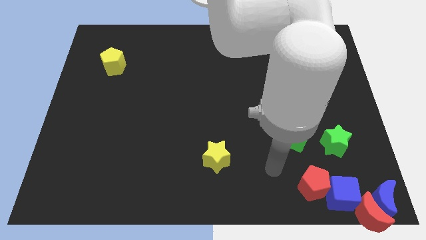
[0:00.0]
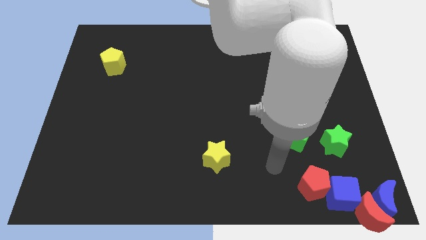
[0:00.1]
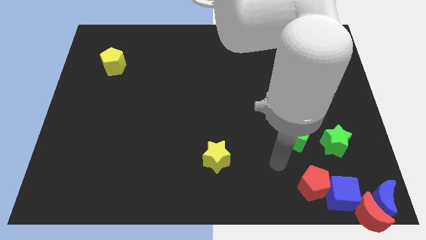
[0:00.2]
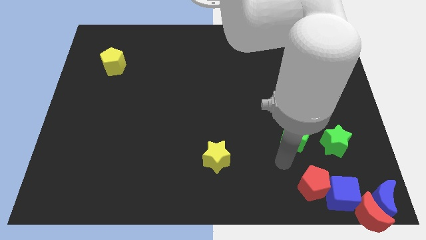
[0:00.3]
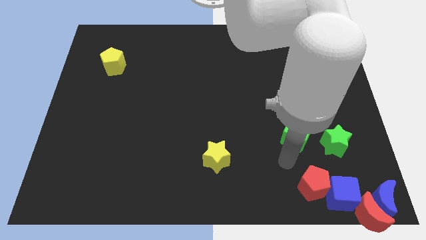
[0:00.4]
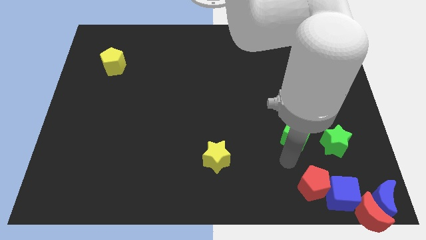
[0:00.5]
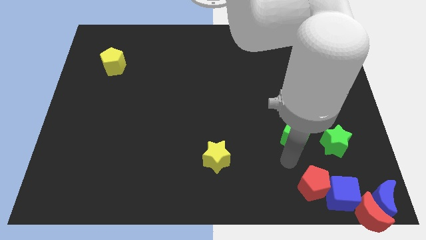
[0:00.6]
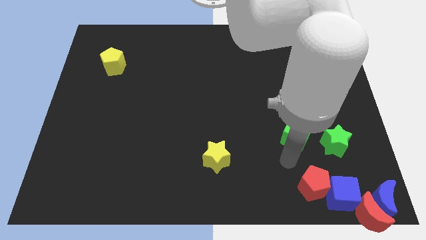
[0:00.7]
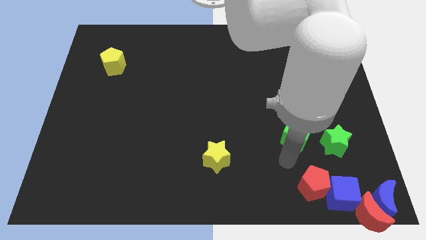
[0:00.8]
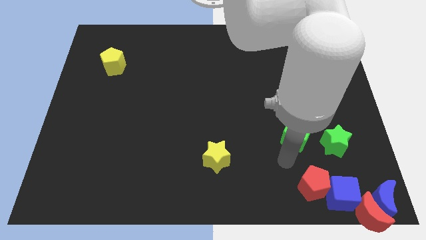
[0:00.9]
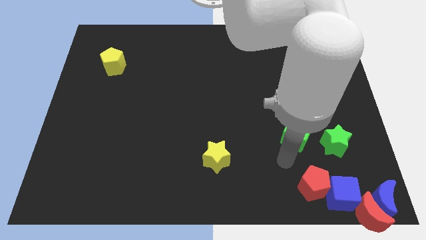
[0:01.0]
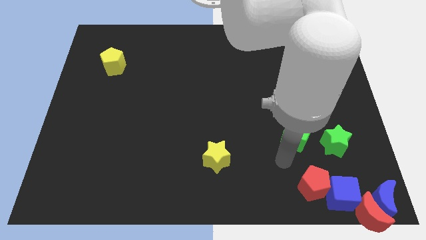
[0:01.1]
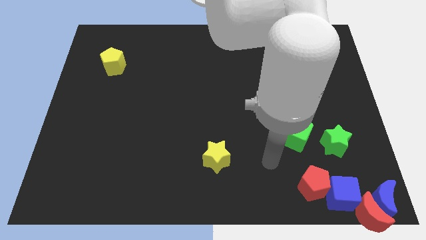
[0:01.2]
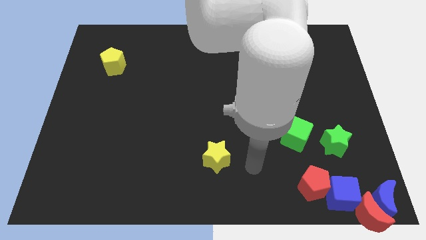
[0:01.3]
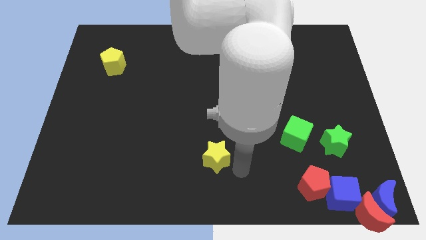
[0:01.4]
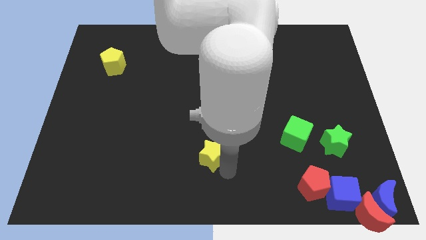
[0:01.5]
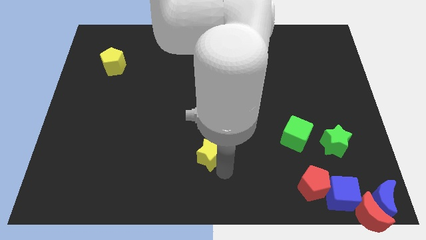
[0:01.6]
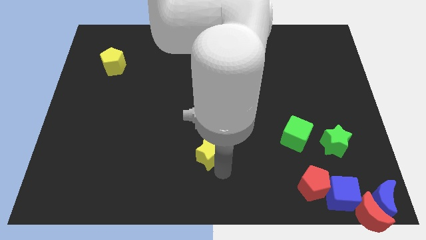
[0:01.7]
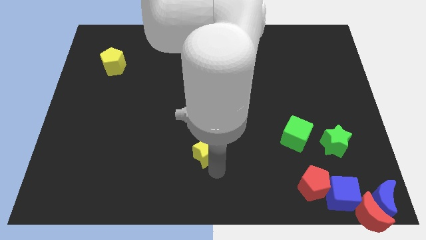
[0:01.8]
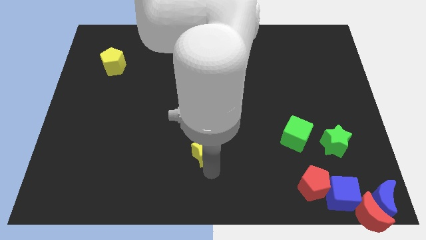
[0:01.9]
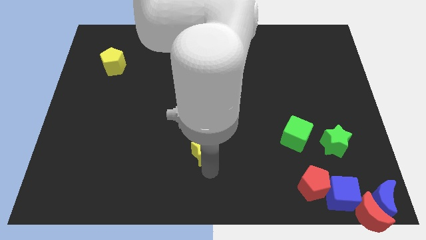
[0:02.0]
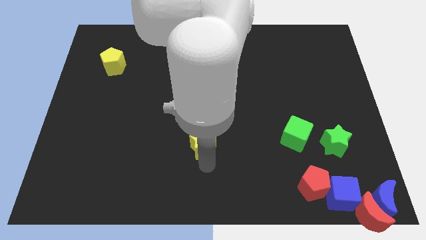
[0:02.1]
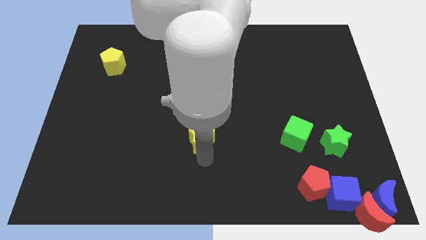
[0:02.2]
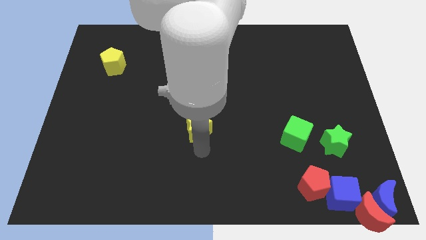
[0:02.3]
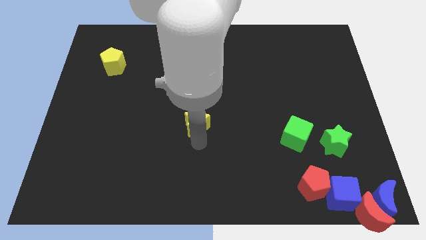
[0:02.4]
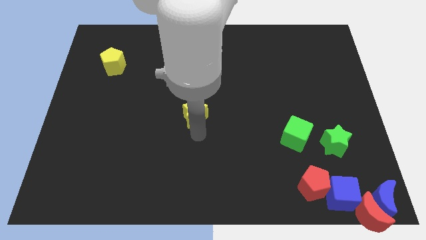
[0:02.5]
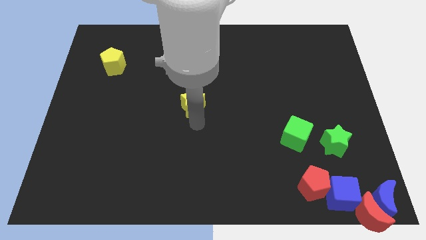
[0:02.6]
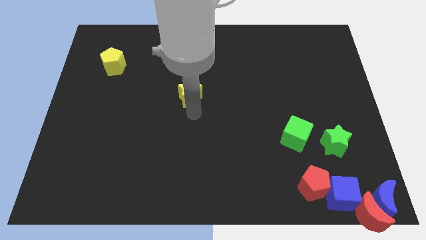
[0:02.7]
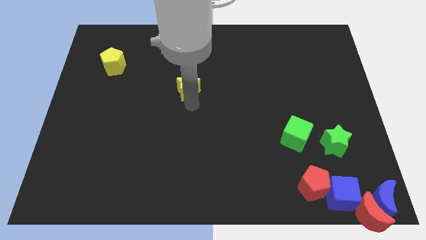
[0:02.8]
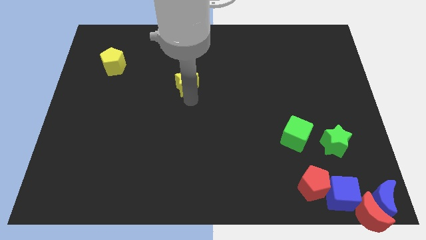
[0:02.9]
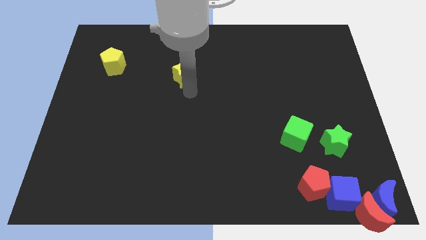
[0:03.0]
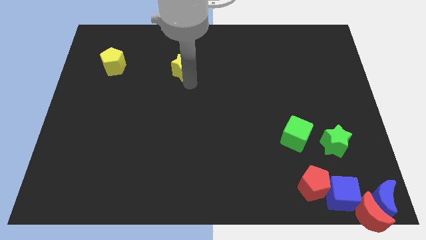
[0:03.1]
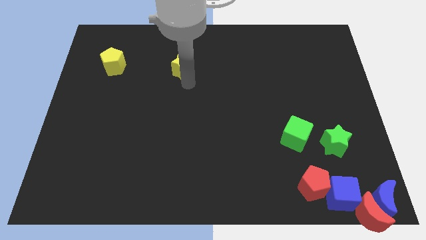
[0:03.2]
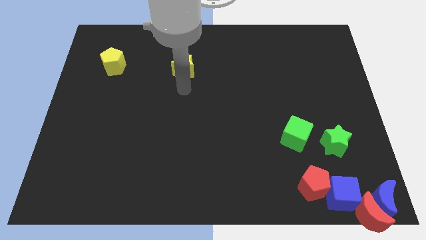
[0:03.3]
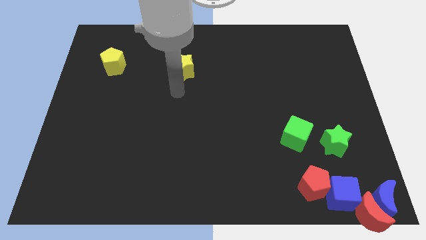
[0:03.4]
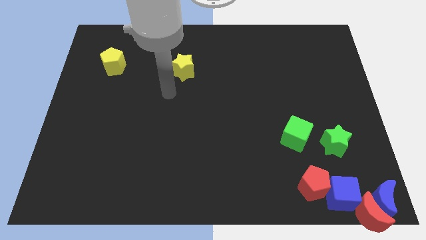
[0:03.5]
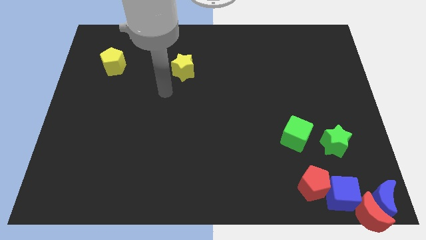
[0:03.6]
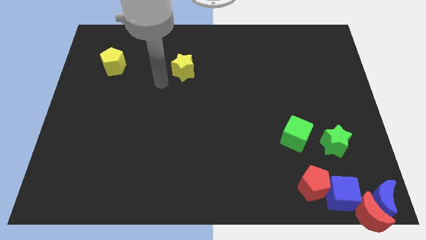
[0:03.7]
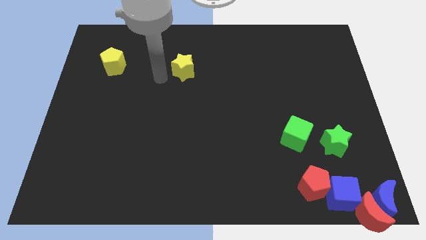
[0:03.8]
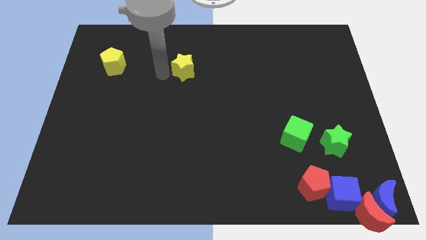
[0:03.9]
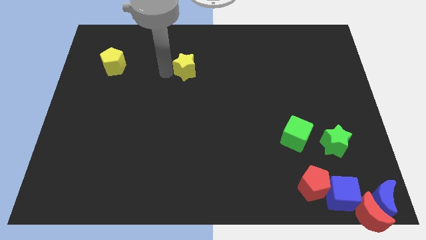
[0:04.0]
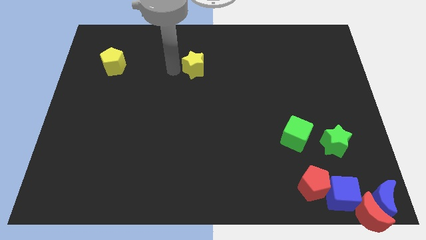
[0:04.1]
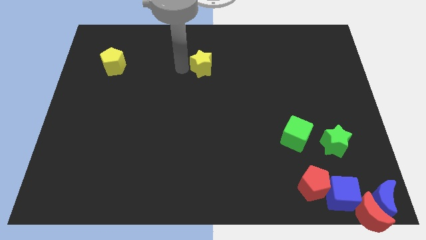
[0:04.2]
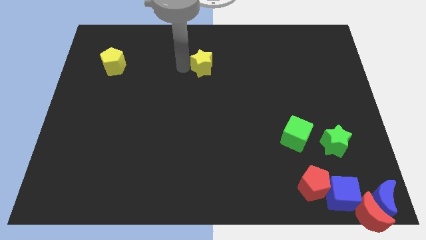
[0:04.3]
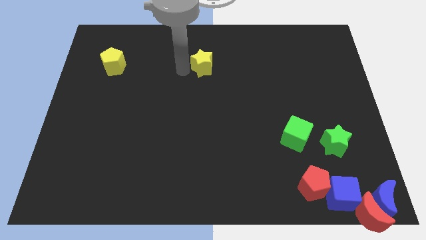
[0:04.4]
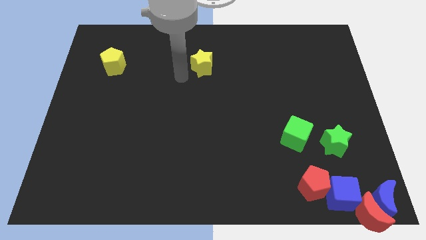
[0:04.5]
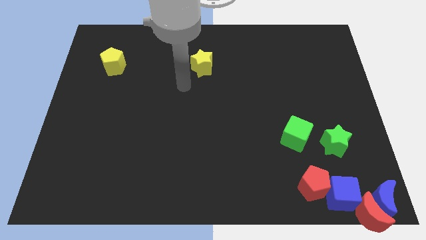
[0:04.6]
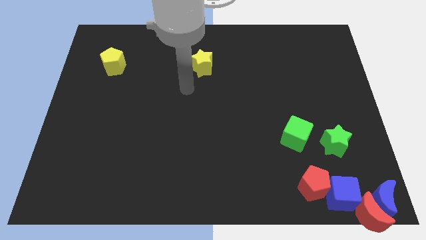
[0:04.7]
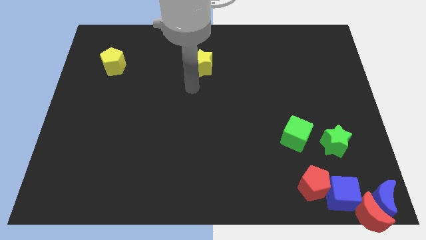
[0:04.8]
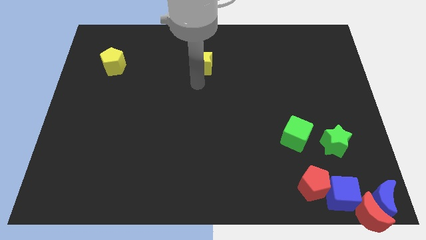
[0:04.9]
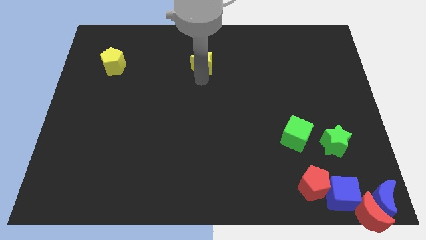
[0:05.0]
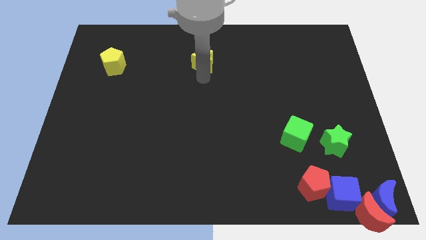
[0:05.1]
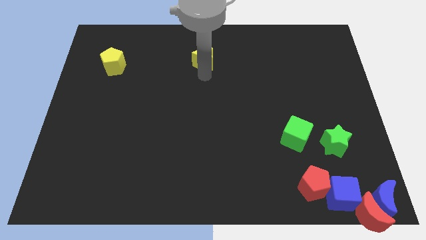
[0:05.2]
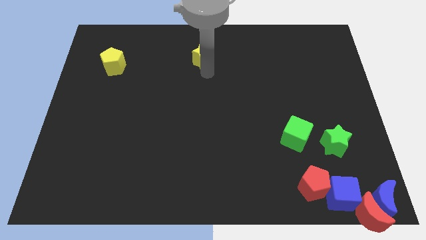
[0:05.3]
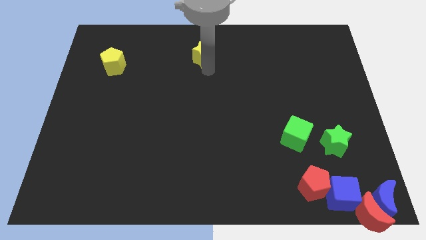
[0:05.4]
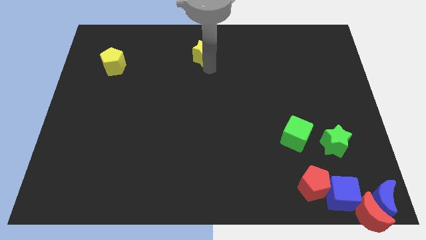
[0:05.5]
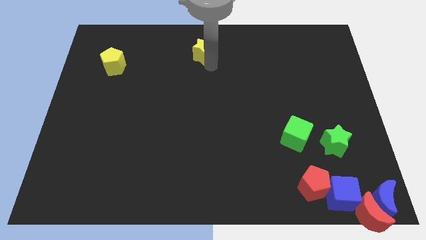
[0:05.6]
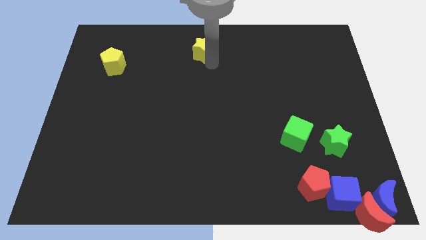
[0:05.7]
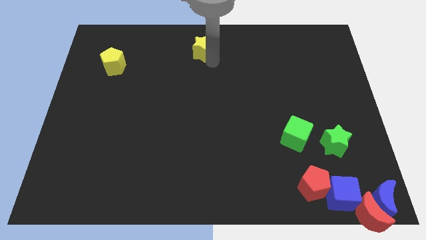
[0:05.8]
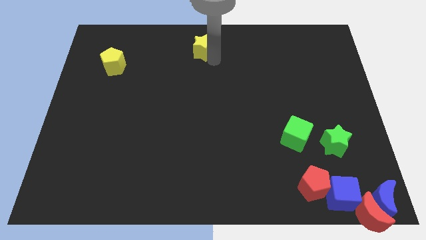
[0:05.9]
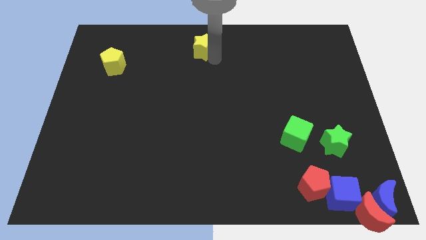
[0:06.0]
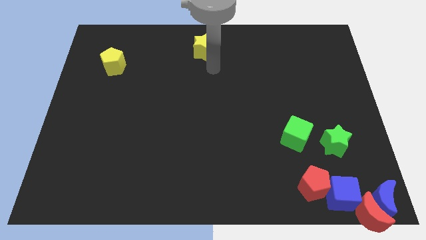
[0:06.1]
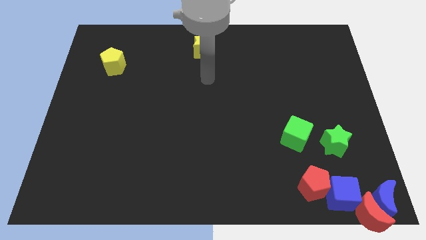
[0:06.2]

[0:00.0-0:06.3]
move the yellow star towards the top center of the board

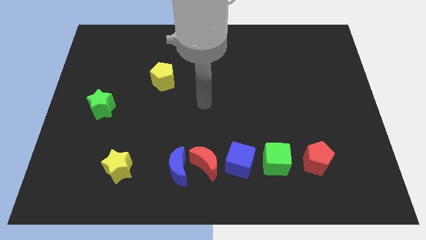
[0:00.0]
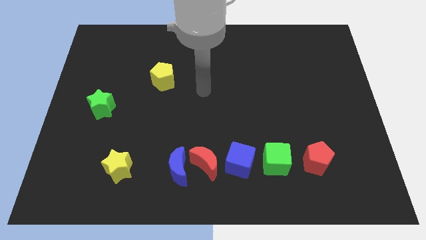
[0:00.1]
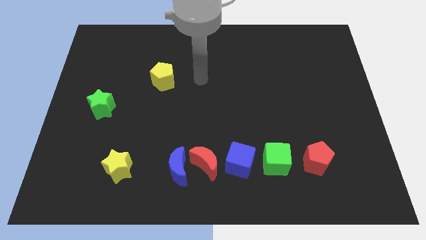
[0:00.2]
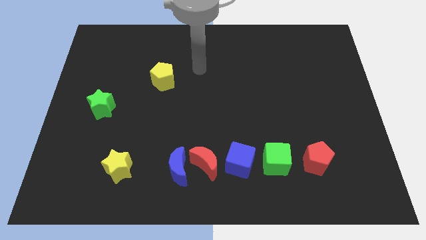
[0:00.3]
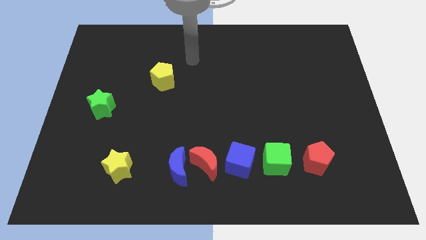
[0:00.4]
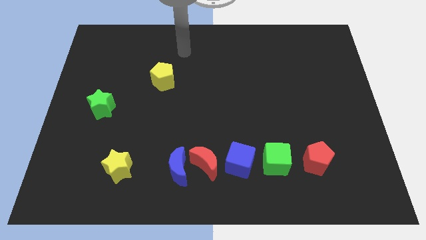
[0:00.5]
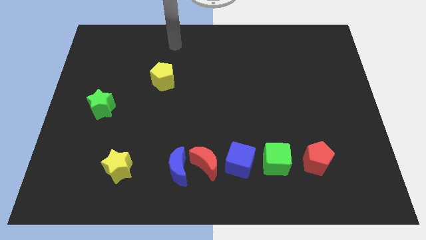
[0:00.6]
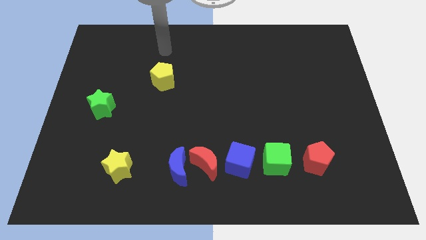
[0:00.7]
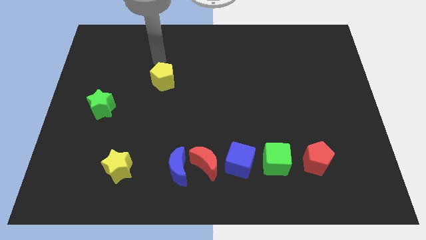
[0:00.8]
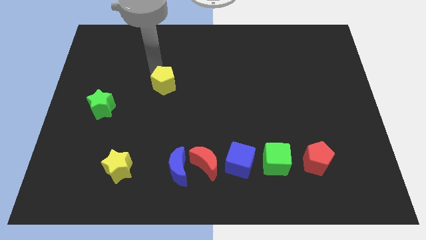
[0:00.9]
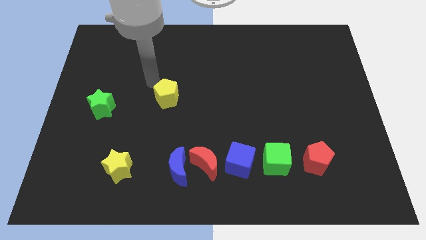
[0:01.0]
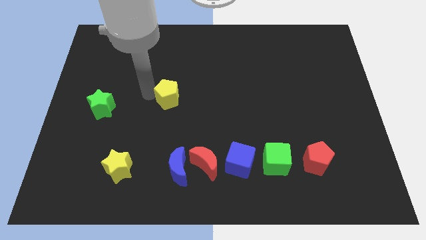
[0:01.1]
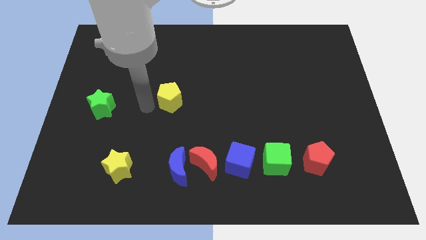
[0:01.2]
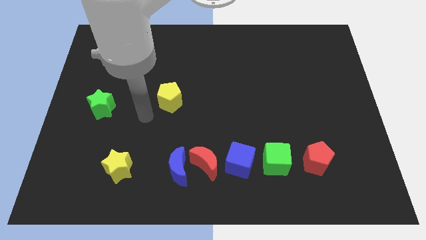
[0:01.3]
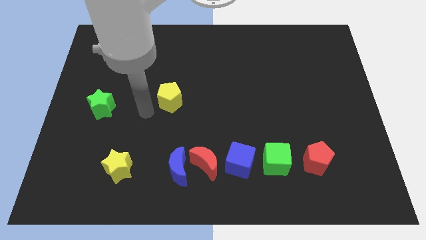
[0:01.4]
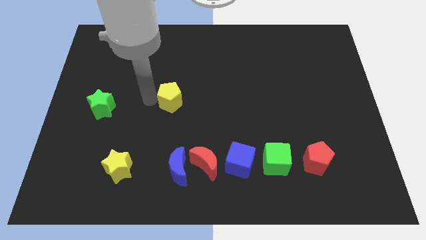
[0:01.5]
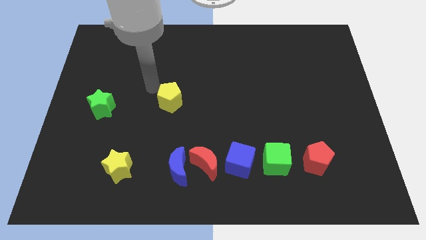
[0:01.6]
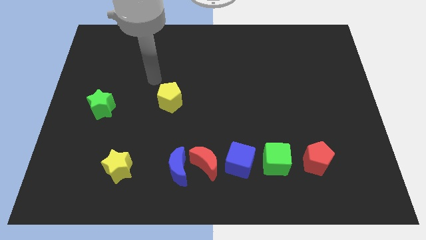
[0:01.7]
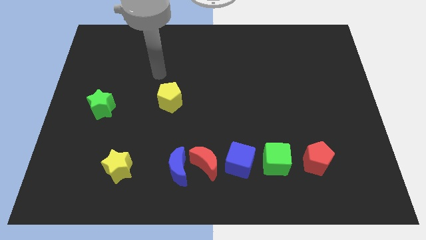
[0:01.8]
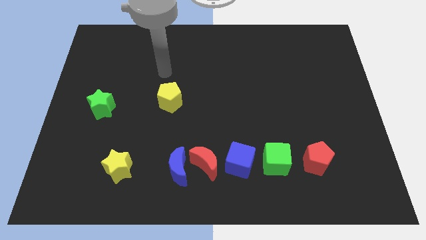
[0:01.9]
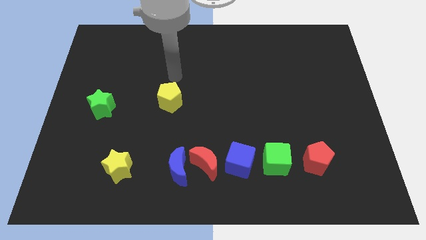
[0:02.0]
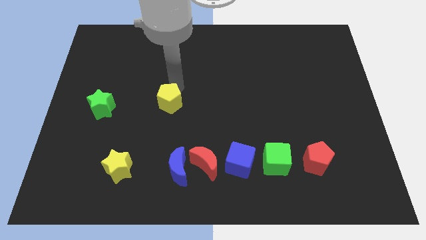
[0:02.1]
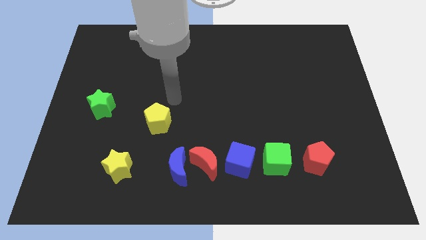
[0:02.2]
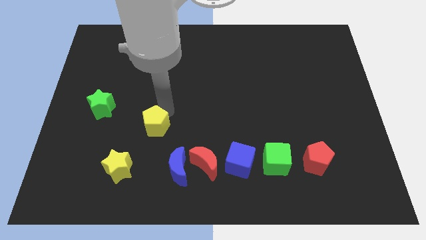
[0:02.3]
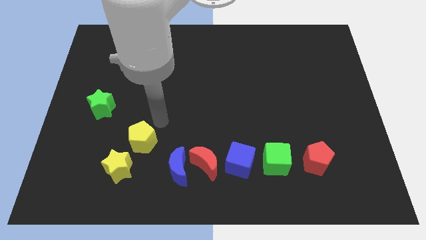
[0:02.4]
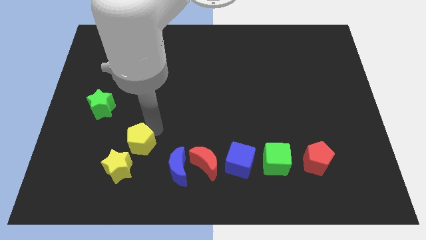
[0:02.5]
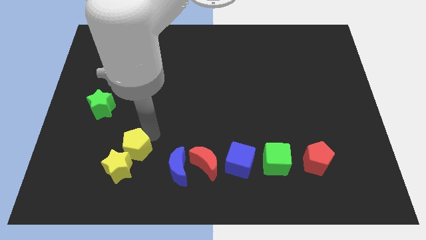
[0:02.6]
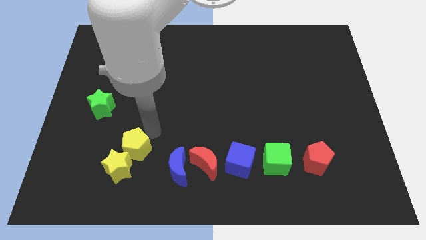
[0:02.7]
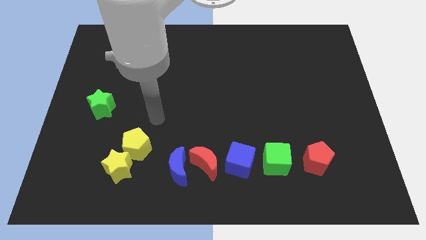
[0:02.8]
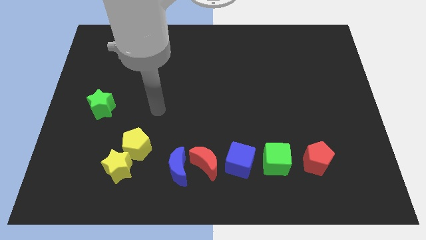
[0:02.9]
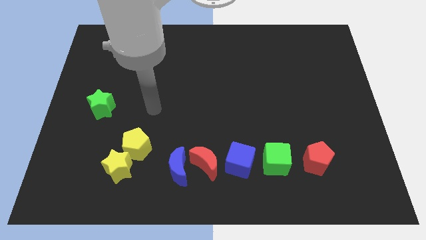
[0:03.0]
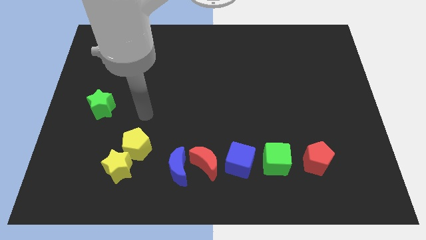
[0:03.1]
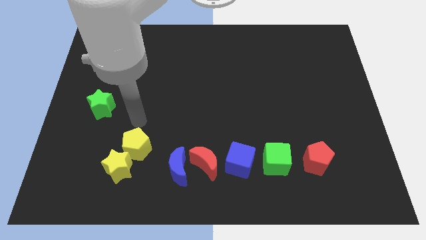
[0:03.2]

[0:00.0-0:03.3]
move yellow pentagon into yellow star
